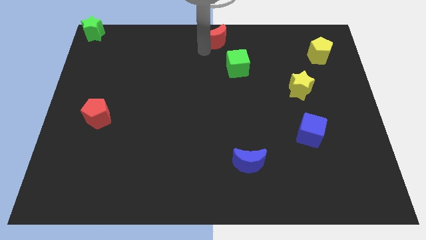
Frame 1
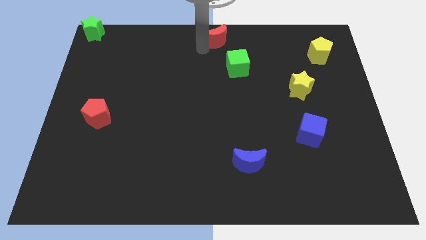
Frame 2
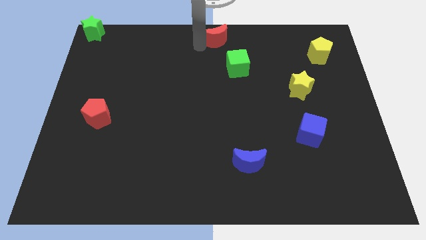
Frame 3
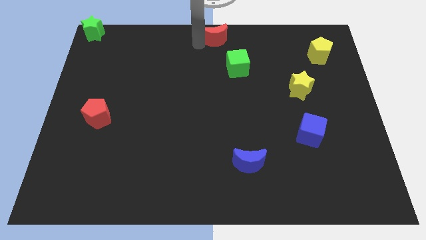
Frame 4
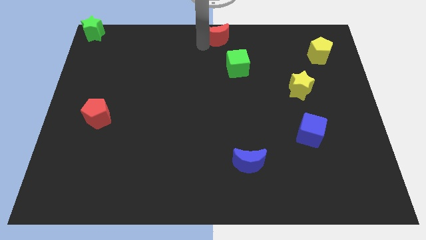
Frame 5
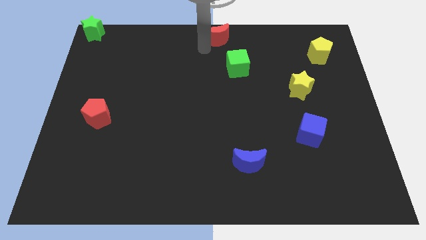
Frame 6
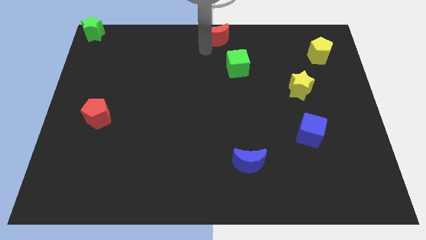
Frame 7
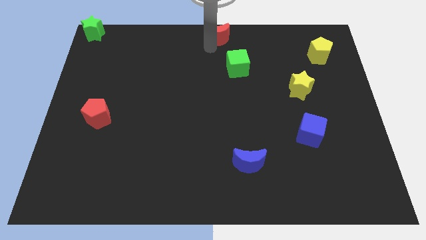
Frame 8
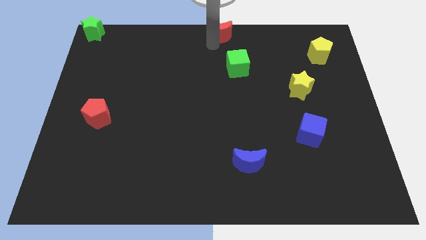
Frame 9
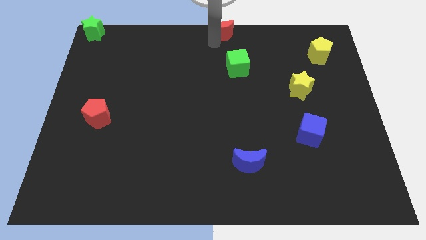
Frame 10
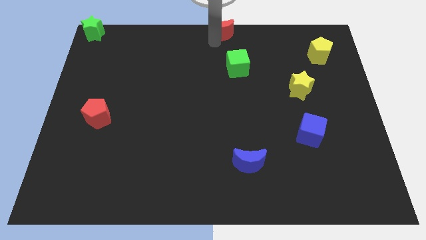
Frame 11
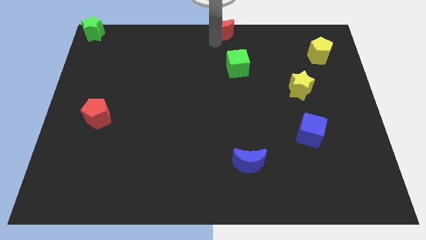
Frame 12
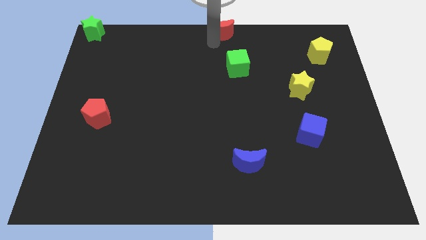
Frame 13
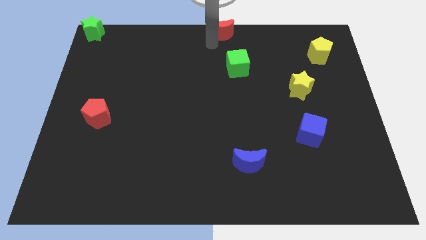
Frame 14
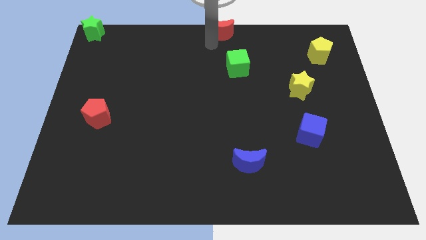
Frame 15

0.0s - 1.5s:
move the red crescent towards the top center of the board

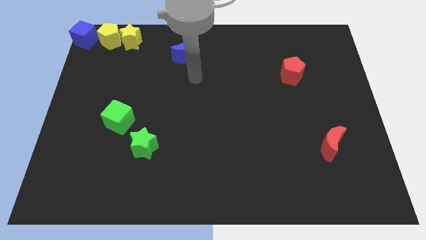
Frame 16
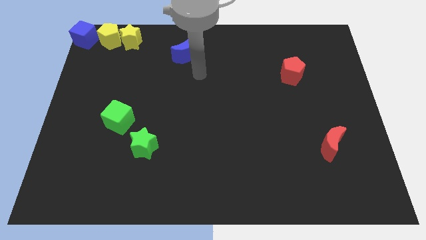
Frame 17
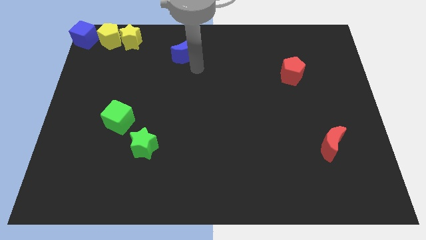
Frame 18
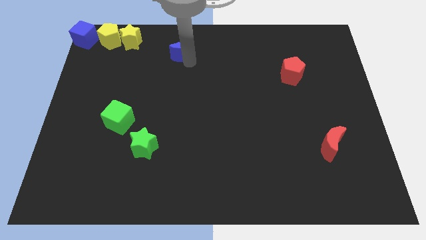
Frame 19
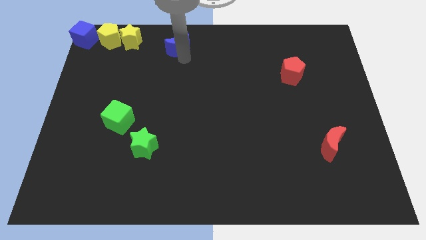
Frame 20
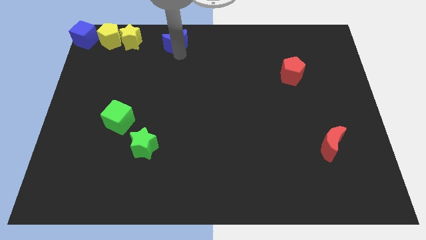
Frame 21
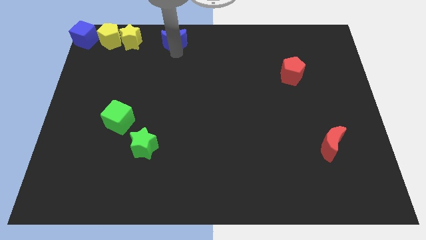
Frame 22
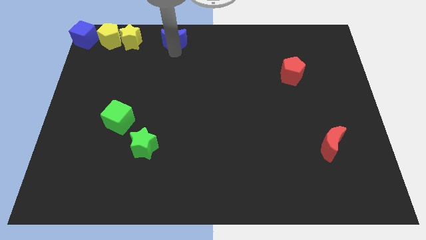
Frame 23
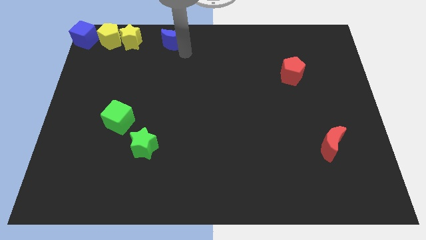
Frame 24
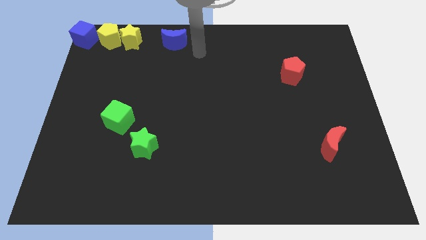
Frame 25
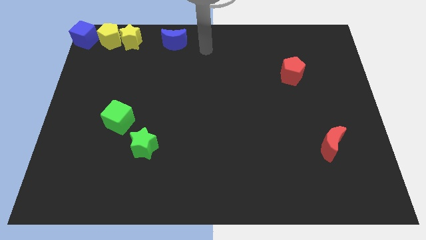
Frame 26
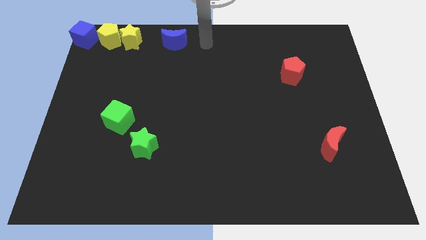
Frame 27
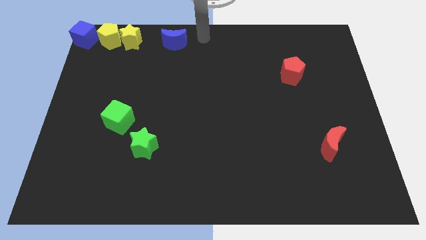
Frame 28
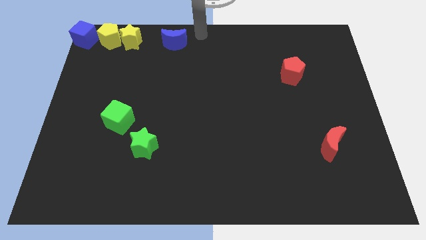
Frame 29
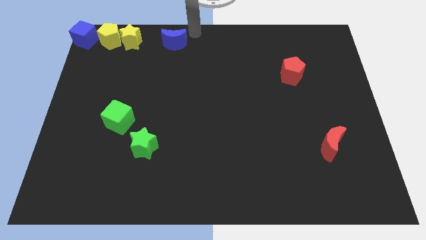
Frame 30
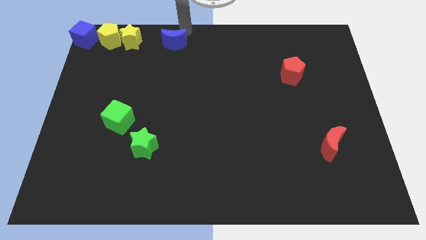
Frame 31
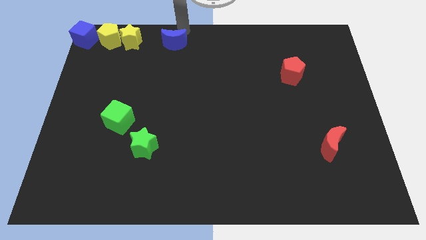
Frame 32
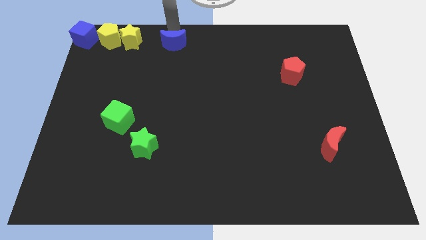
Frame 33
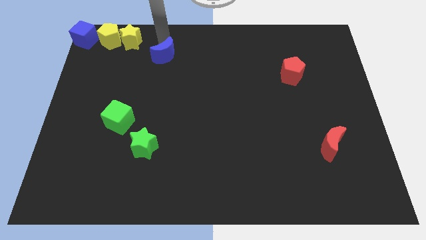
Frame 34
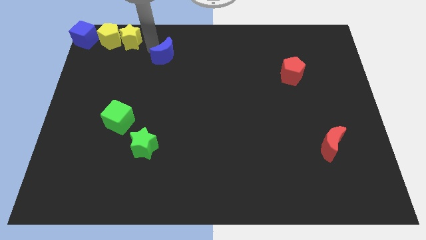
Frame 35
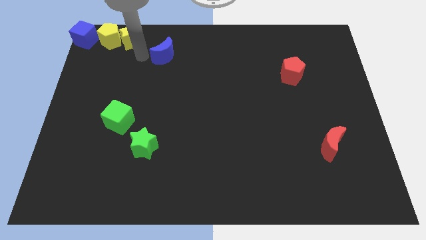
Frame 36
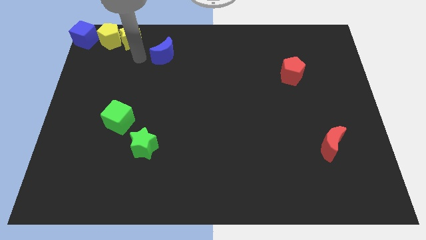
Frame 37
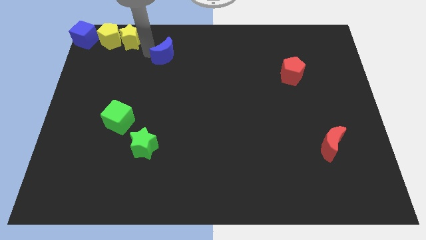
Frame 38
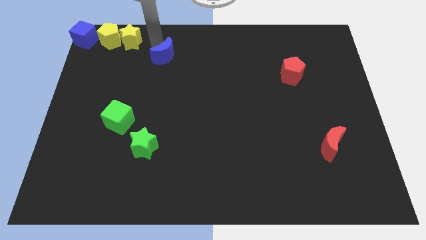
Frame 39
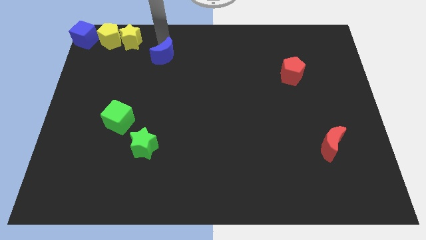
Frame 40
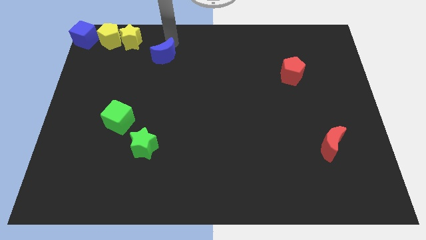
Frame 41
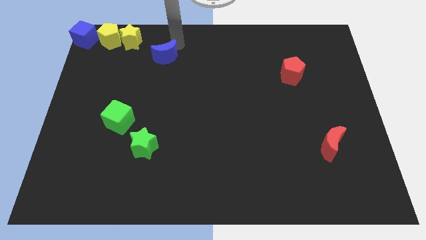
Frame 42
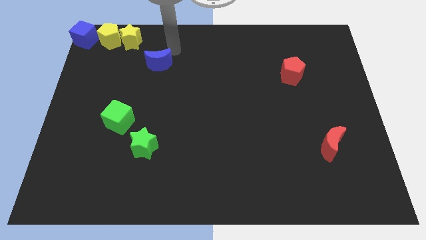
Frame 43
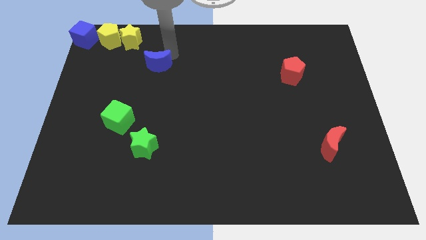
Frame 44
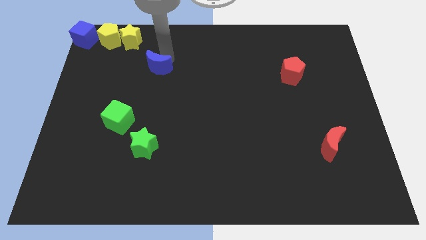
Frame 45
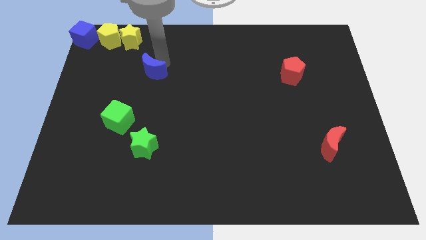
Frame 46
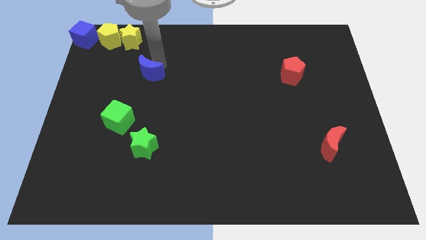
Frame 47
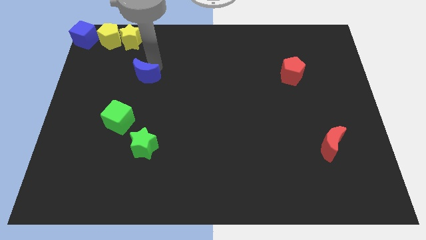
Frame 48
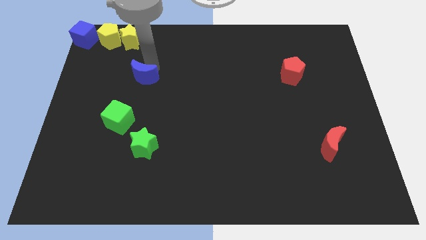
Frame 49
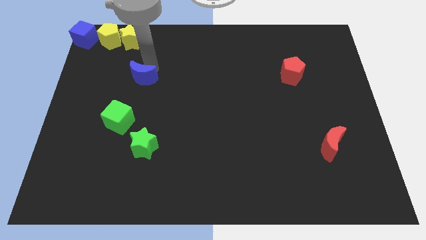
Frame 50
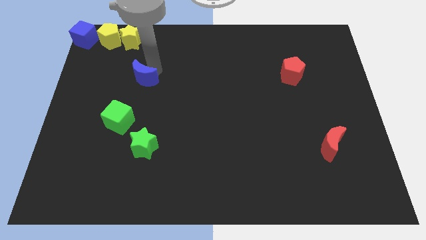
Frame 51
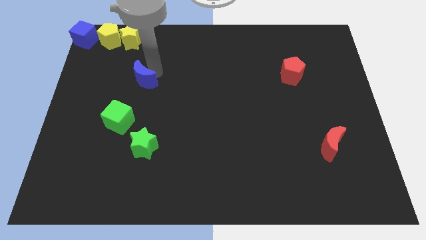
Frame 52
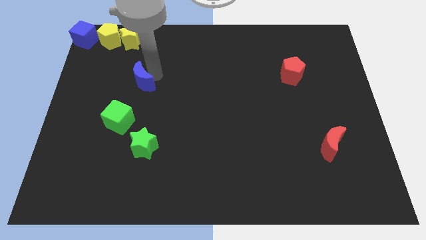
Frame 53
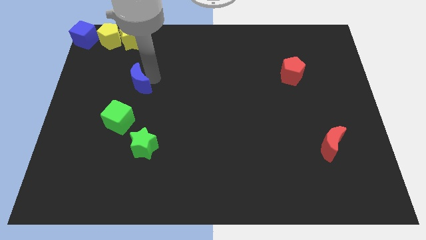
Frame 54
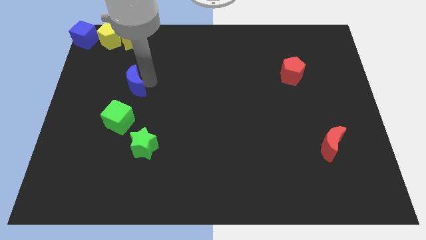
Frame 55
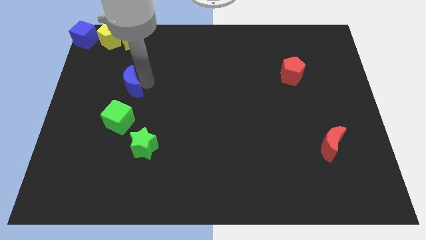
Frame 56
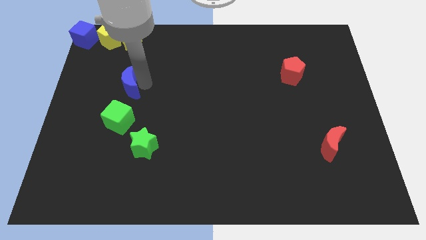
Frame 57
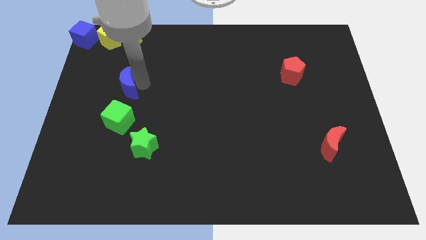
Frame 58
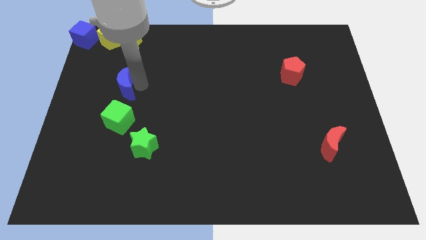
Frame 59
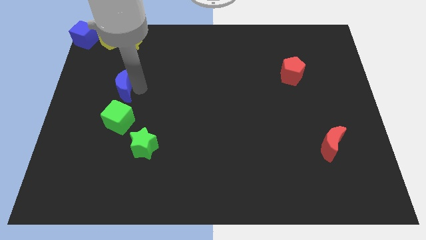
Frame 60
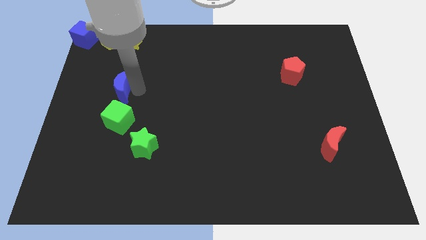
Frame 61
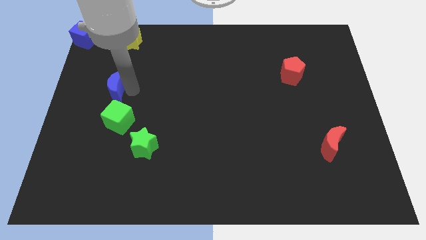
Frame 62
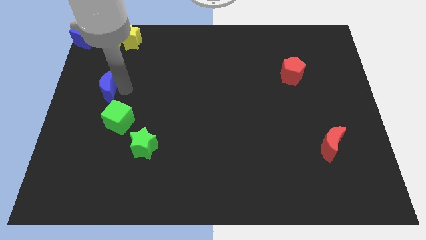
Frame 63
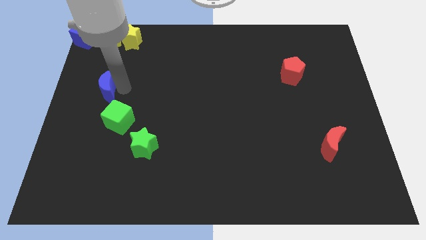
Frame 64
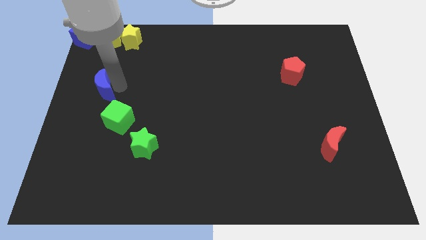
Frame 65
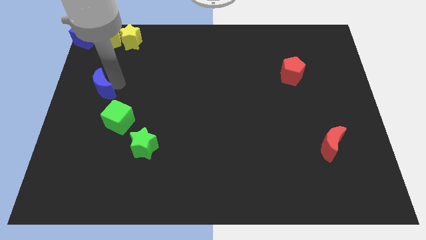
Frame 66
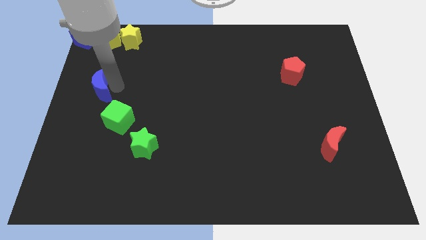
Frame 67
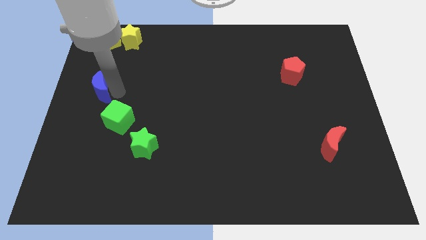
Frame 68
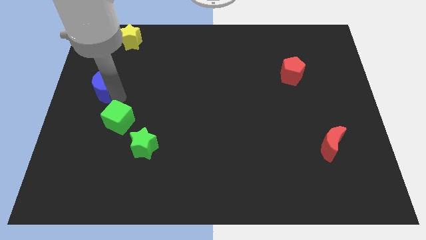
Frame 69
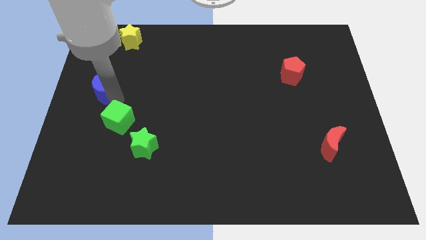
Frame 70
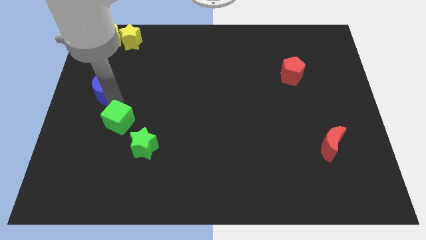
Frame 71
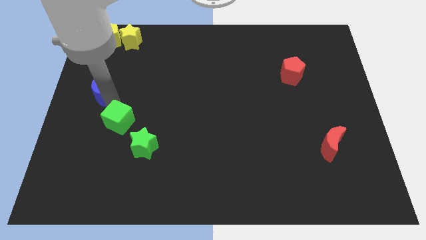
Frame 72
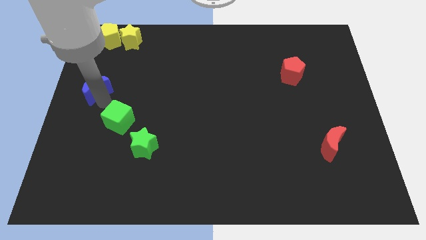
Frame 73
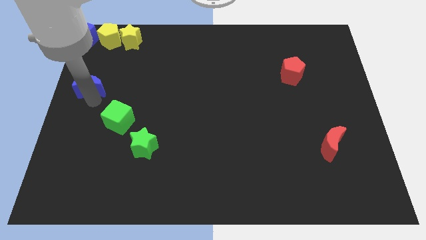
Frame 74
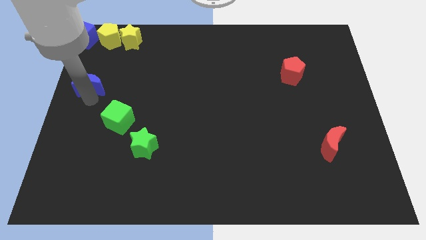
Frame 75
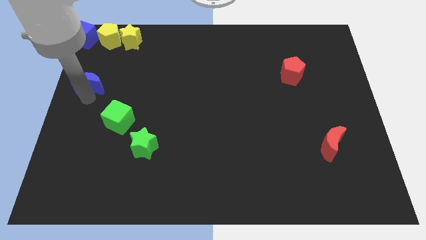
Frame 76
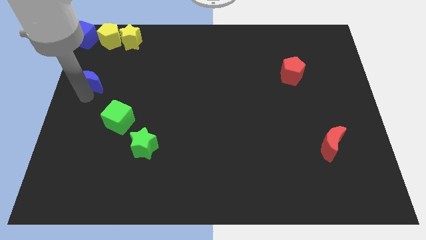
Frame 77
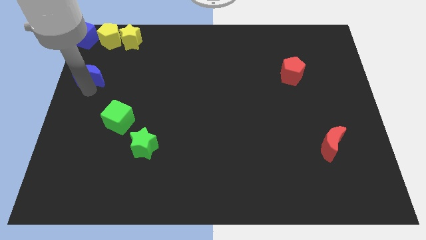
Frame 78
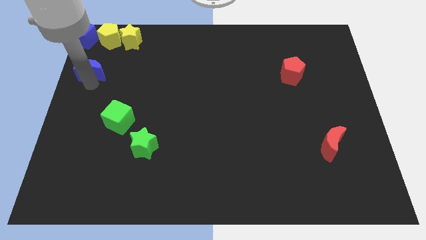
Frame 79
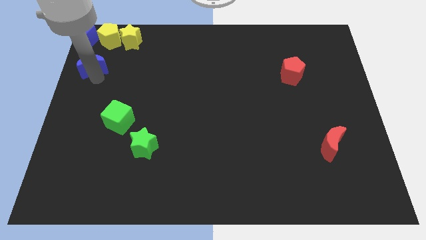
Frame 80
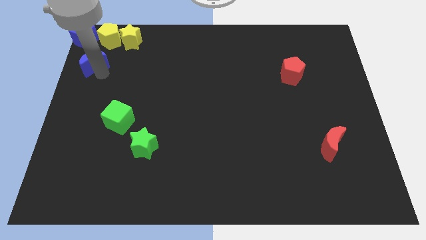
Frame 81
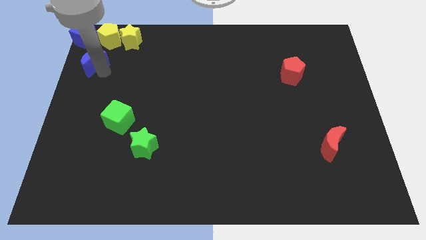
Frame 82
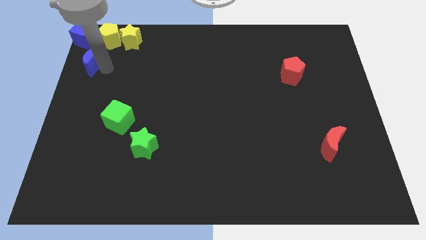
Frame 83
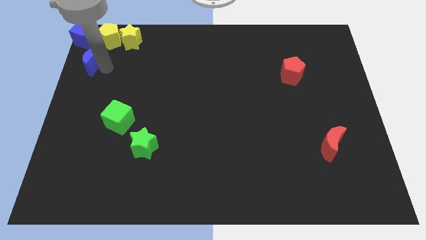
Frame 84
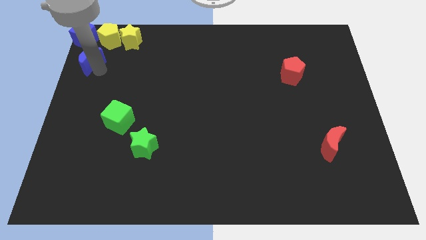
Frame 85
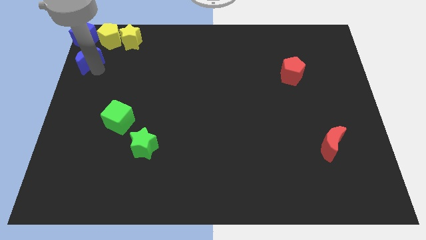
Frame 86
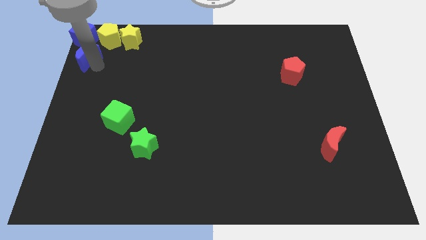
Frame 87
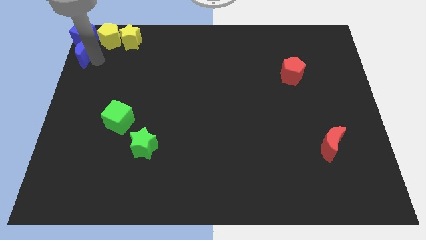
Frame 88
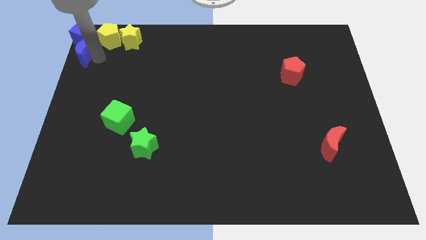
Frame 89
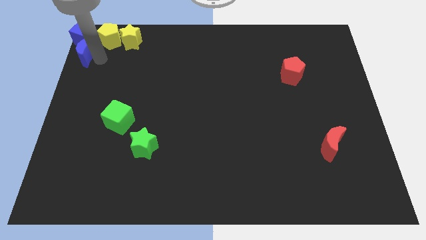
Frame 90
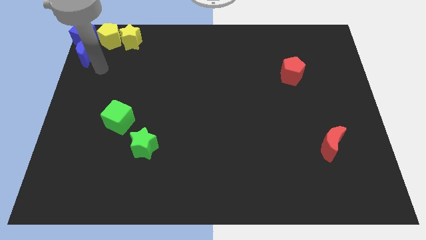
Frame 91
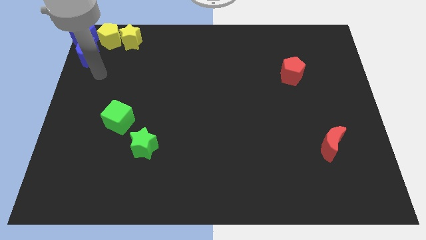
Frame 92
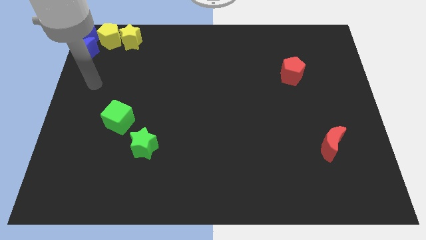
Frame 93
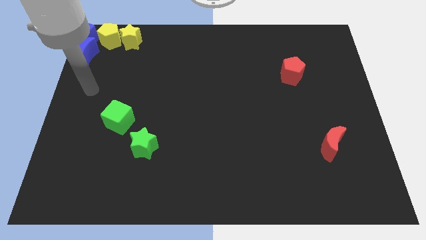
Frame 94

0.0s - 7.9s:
place the blue moon below the blue cube
